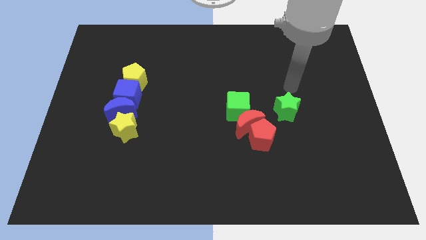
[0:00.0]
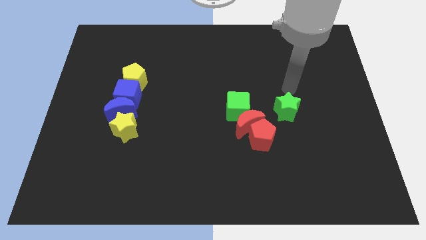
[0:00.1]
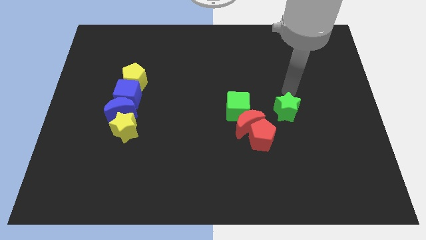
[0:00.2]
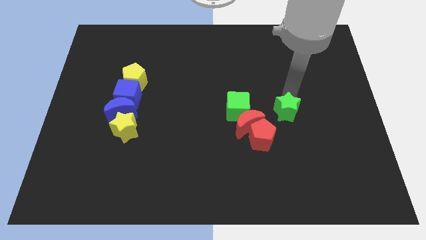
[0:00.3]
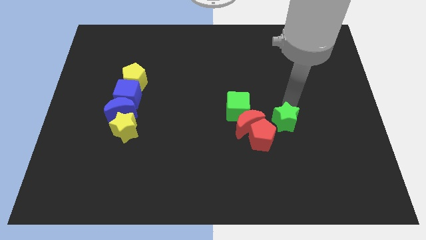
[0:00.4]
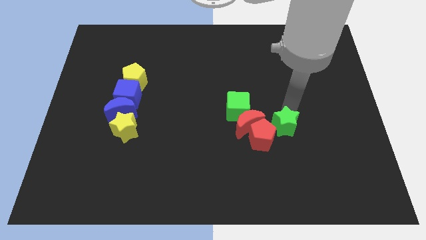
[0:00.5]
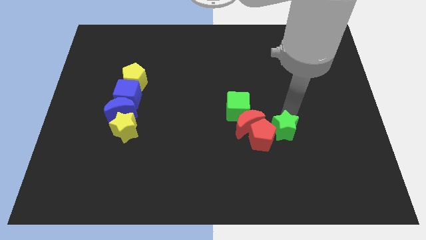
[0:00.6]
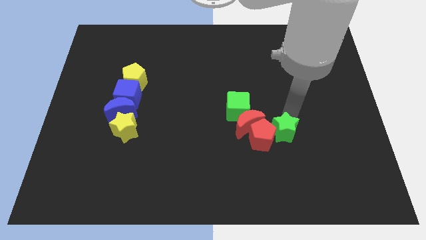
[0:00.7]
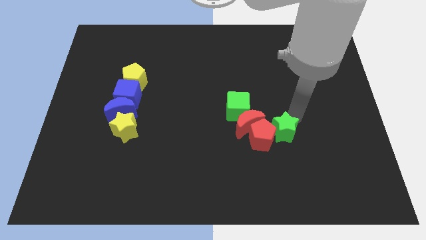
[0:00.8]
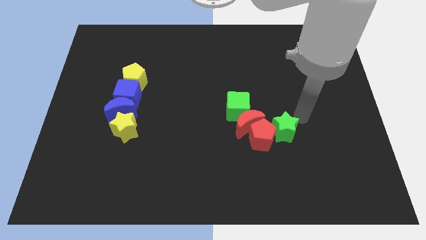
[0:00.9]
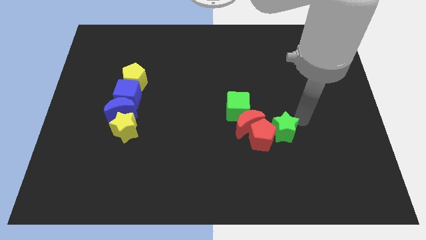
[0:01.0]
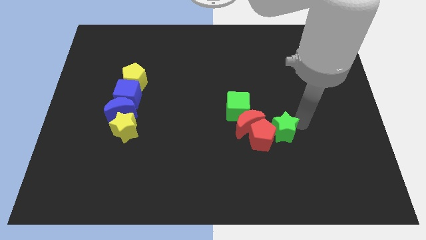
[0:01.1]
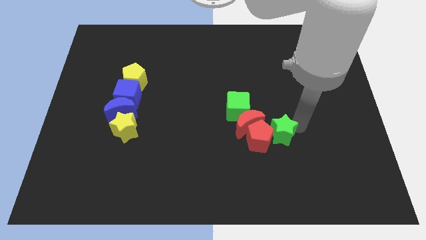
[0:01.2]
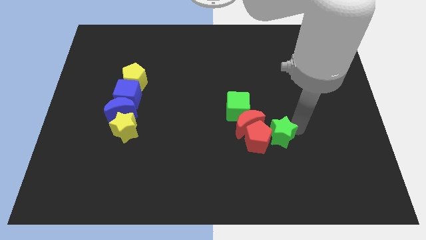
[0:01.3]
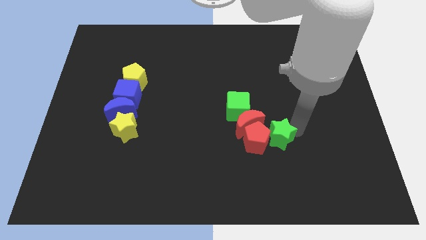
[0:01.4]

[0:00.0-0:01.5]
move the green star into the right of the red pentagon

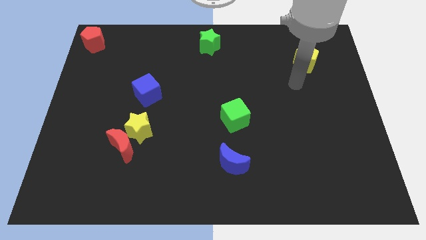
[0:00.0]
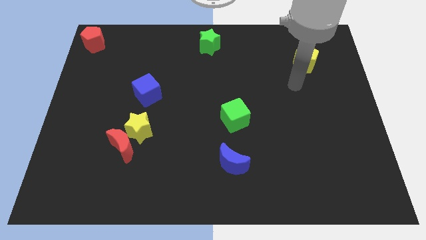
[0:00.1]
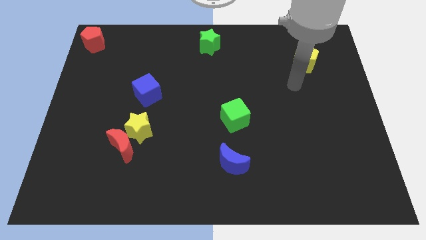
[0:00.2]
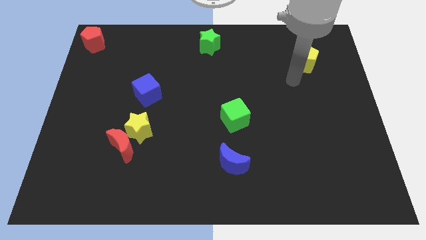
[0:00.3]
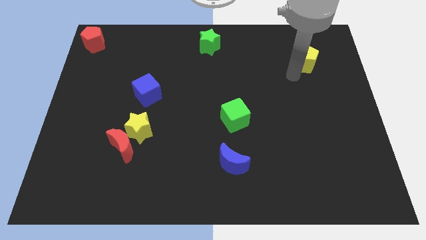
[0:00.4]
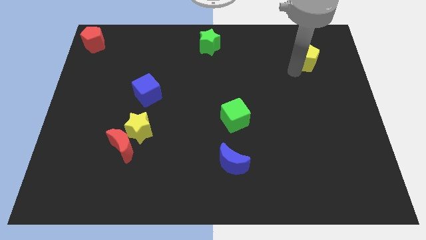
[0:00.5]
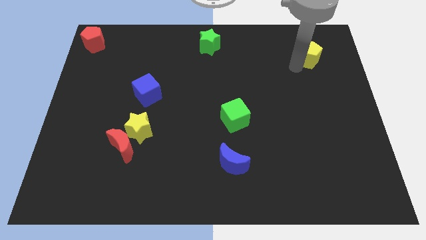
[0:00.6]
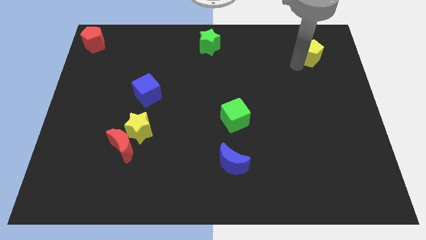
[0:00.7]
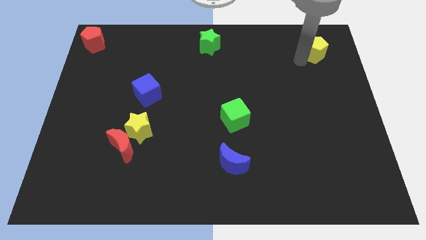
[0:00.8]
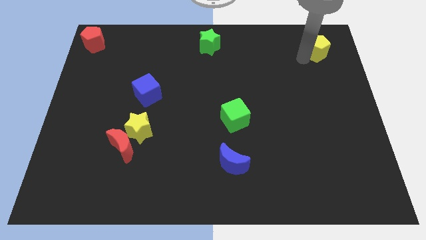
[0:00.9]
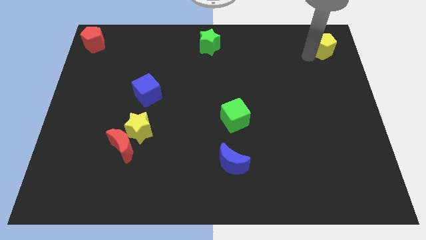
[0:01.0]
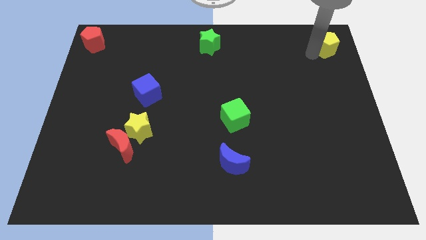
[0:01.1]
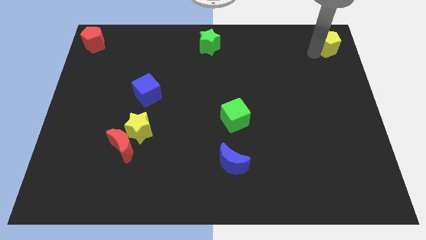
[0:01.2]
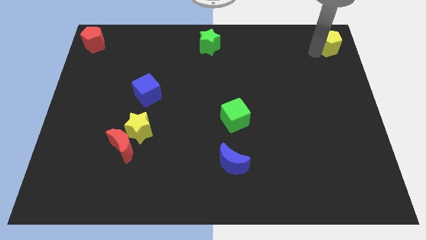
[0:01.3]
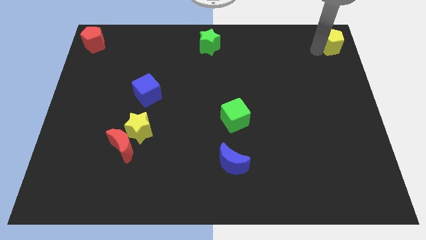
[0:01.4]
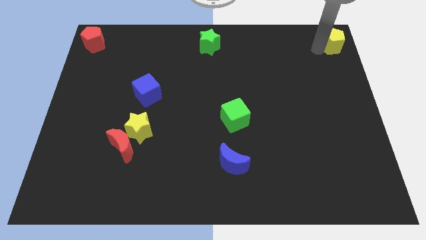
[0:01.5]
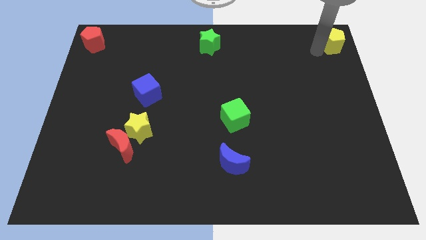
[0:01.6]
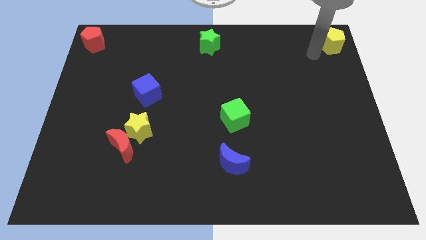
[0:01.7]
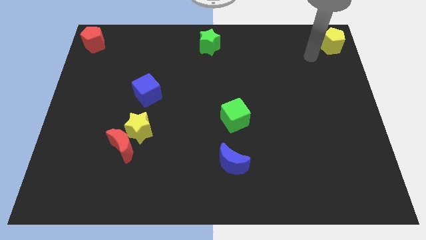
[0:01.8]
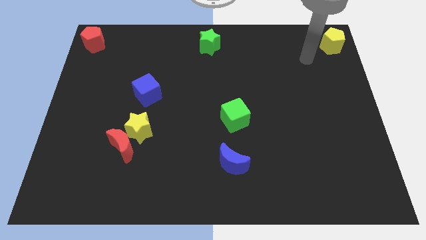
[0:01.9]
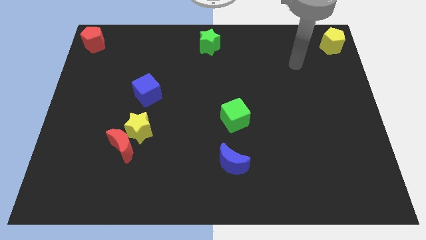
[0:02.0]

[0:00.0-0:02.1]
slide yellow pentagon to the top right

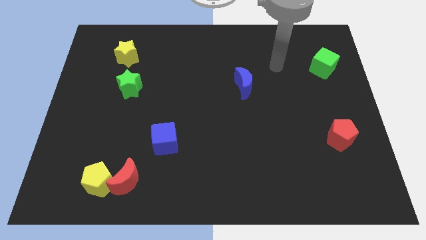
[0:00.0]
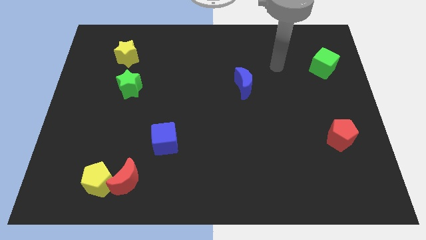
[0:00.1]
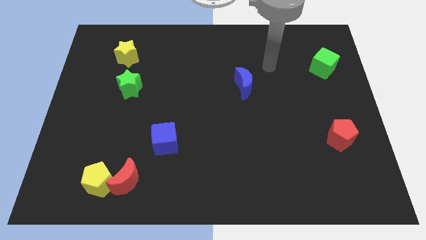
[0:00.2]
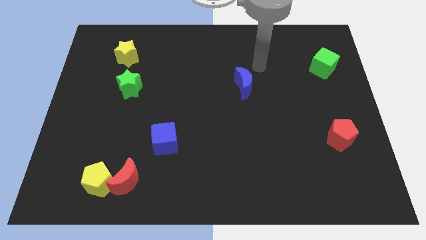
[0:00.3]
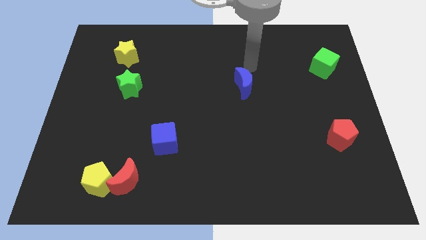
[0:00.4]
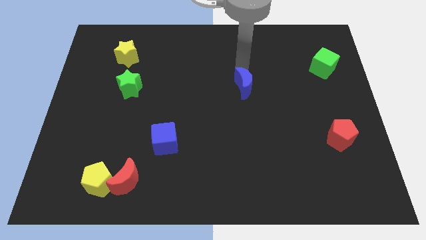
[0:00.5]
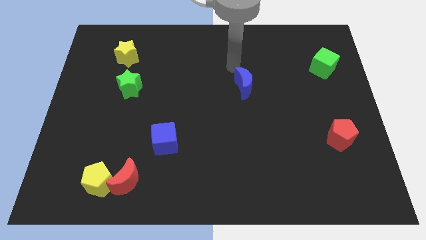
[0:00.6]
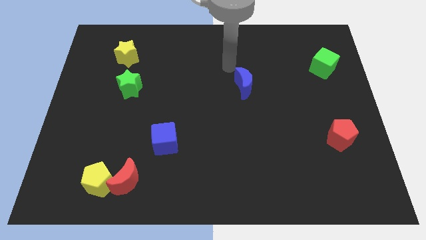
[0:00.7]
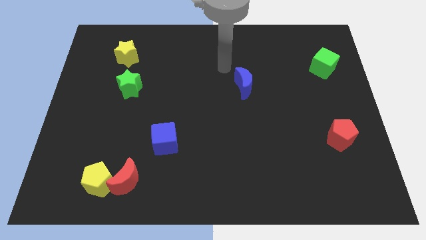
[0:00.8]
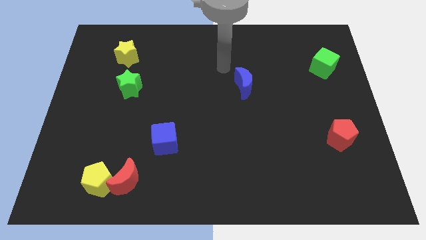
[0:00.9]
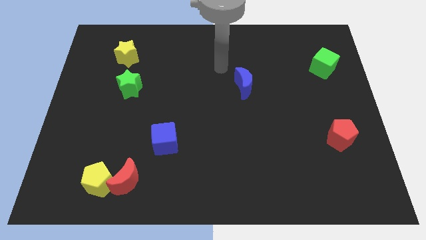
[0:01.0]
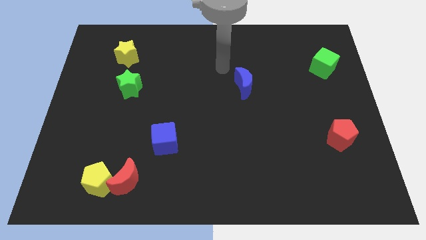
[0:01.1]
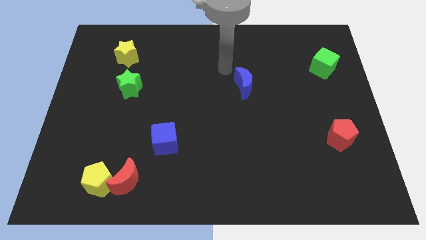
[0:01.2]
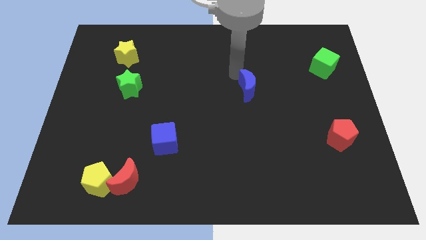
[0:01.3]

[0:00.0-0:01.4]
place your arm above the blue moon

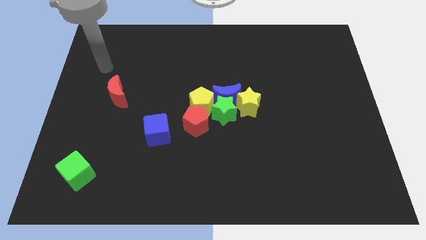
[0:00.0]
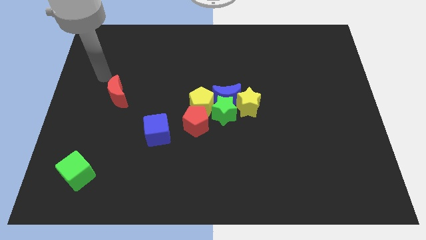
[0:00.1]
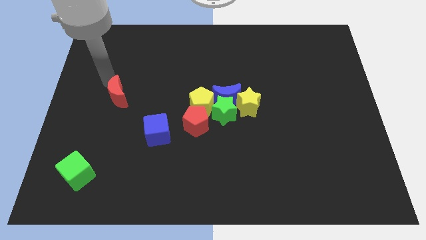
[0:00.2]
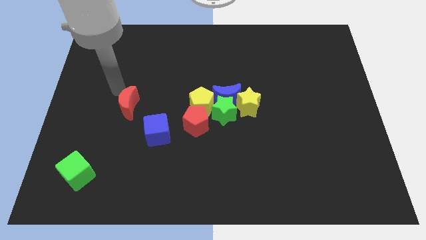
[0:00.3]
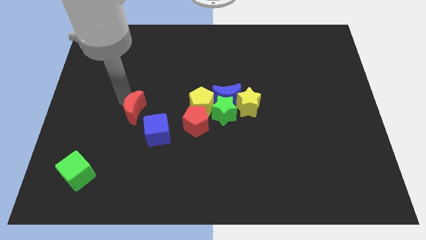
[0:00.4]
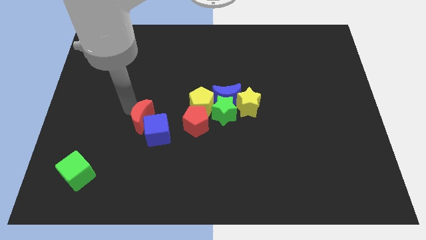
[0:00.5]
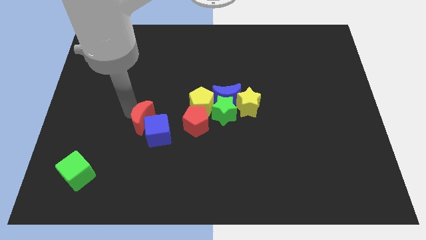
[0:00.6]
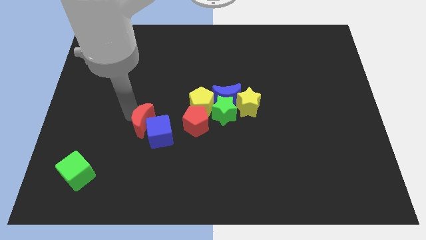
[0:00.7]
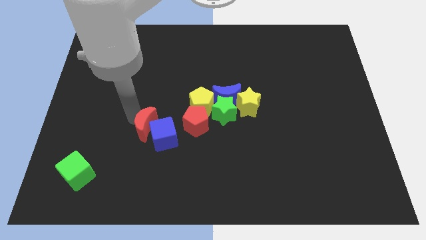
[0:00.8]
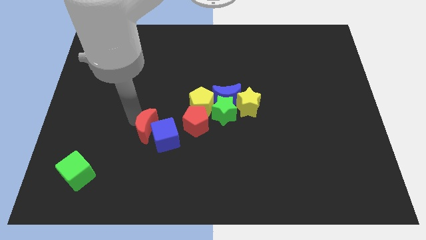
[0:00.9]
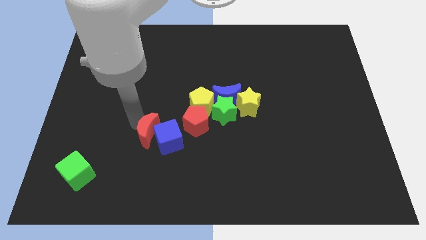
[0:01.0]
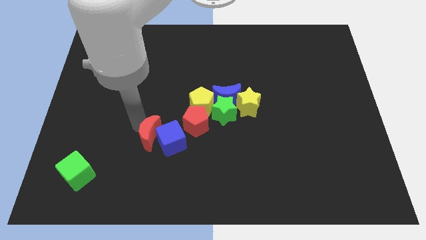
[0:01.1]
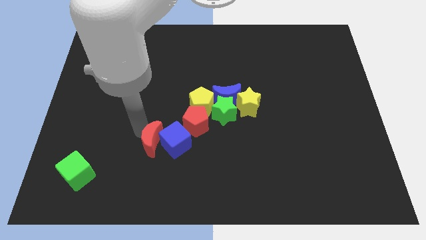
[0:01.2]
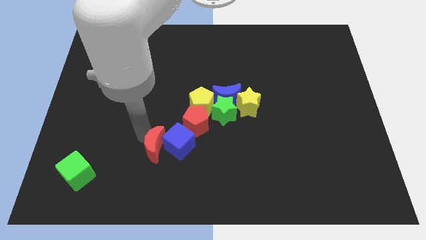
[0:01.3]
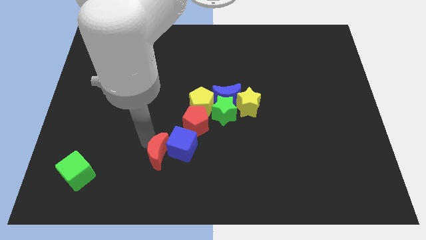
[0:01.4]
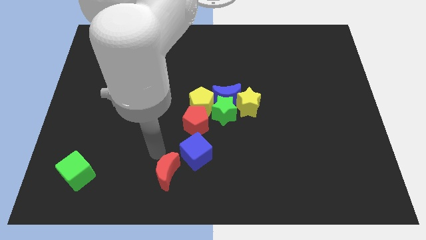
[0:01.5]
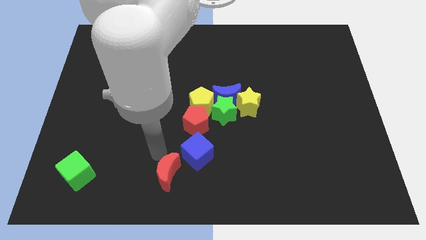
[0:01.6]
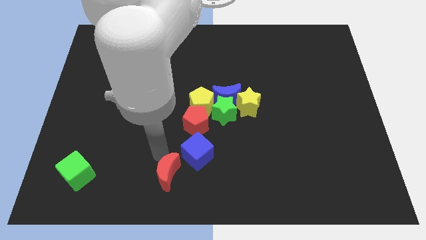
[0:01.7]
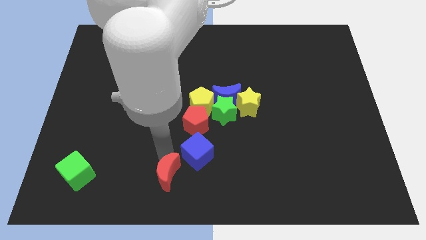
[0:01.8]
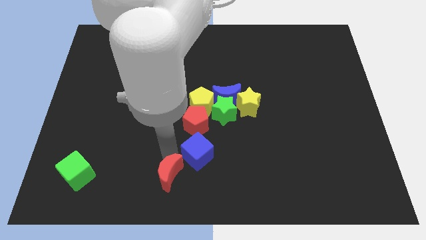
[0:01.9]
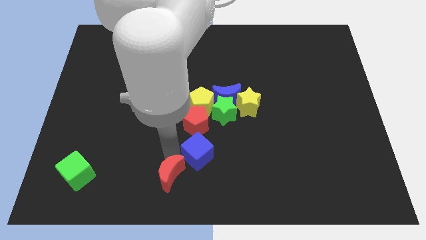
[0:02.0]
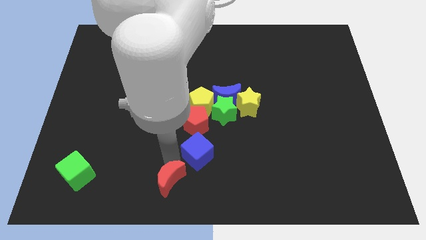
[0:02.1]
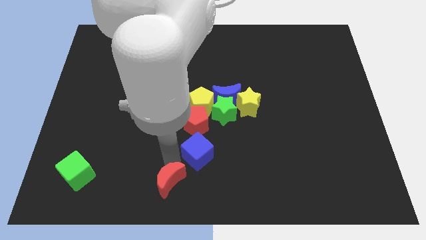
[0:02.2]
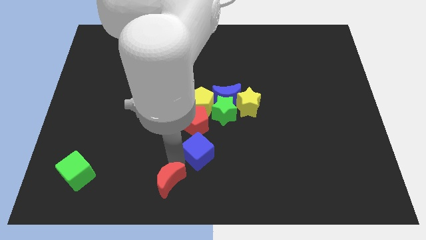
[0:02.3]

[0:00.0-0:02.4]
push the red crescent into the blue cube

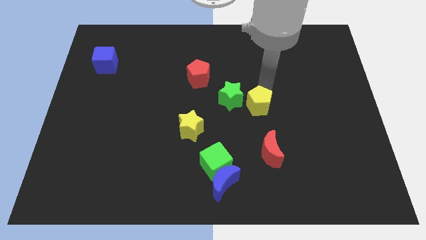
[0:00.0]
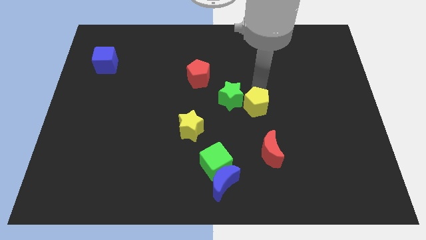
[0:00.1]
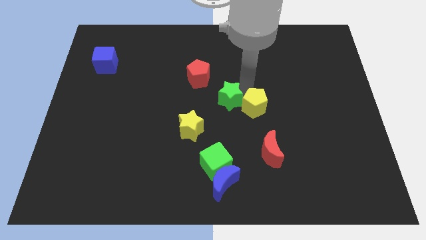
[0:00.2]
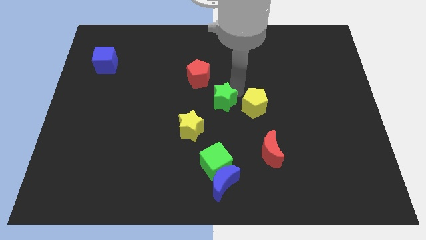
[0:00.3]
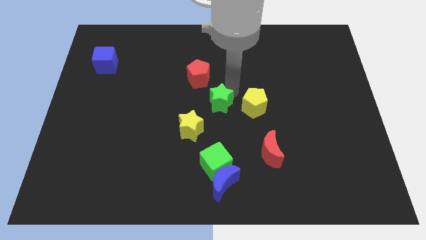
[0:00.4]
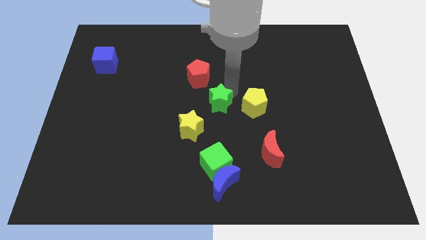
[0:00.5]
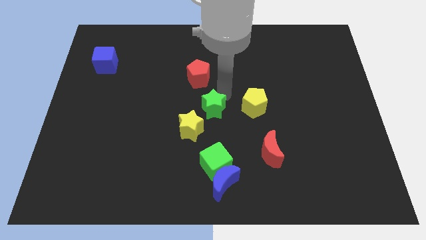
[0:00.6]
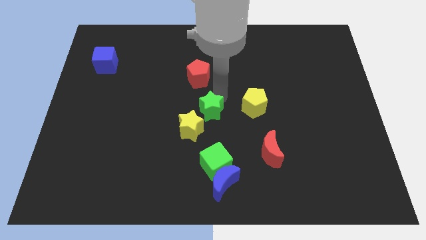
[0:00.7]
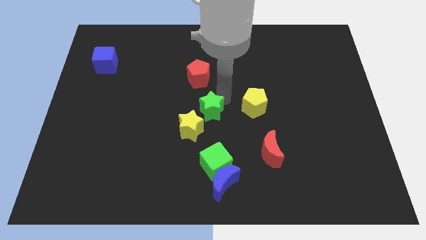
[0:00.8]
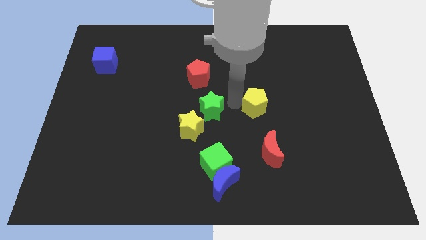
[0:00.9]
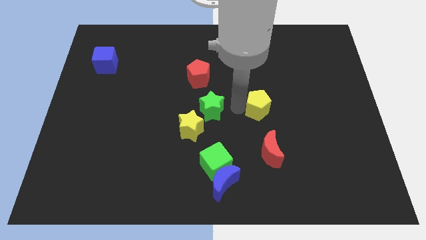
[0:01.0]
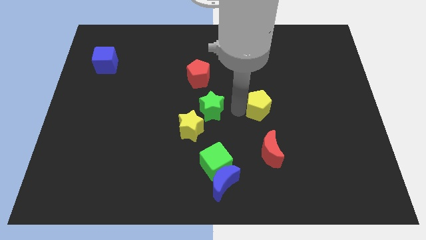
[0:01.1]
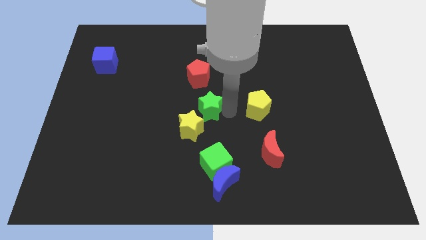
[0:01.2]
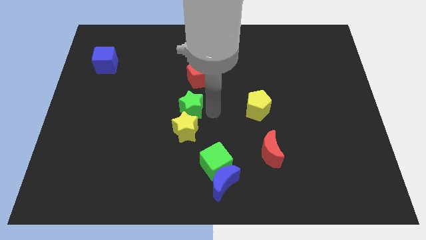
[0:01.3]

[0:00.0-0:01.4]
separate green star and the yellow pentagon

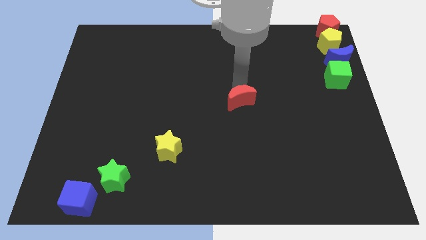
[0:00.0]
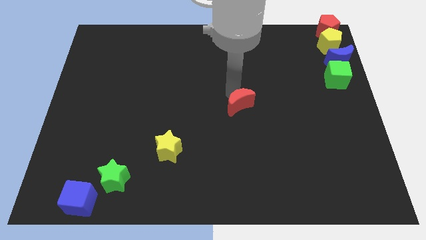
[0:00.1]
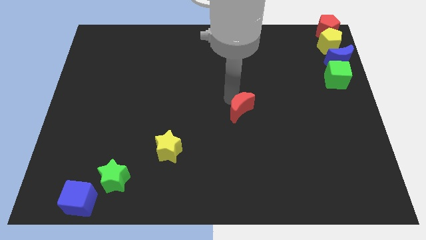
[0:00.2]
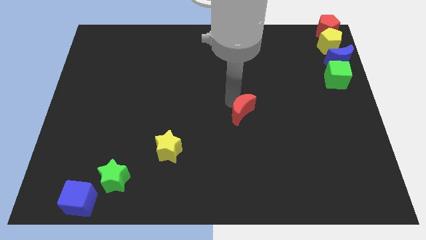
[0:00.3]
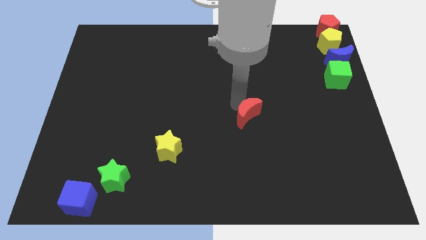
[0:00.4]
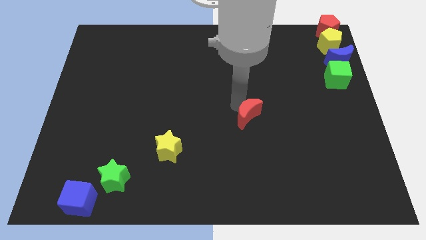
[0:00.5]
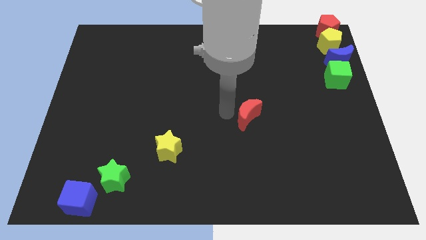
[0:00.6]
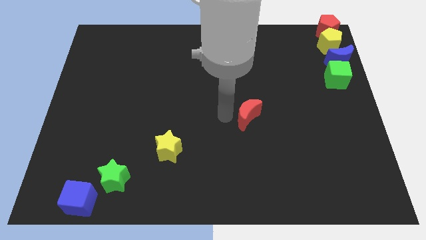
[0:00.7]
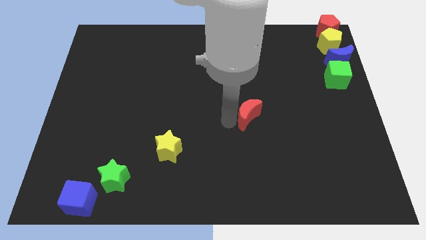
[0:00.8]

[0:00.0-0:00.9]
place the red moon in between the green cube and yellow star
